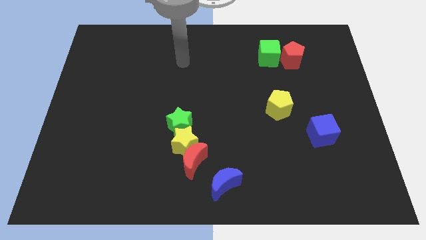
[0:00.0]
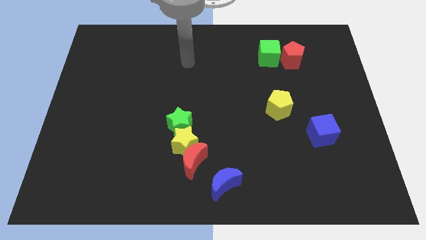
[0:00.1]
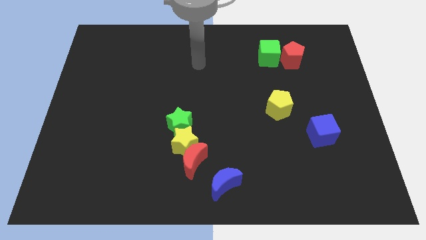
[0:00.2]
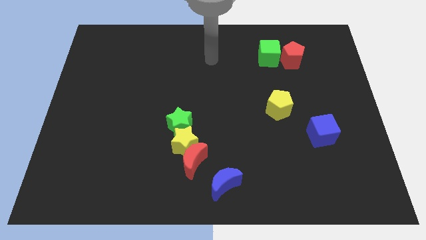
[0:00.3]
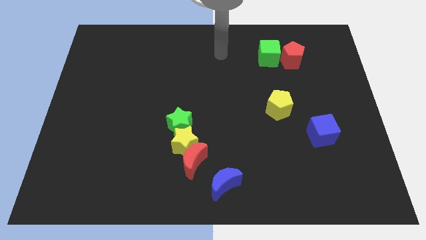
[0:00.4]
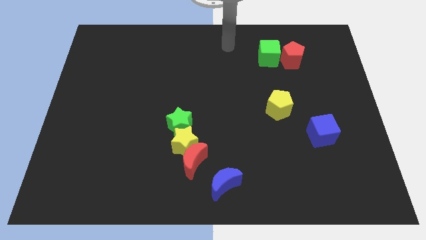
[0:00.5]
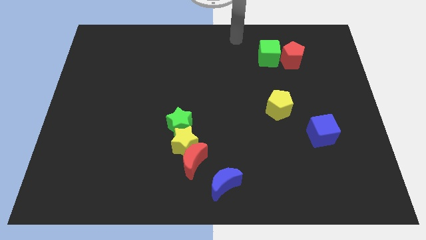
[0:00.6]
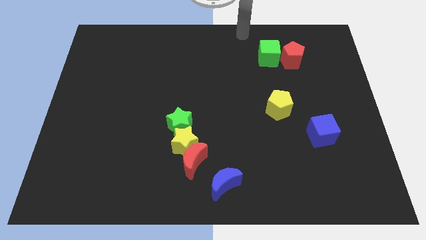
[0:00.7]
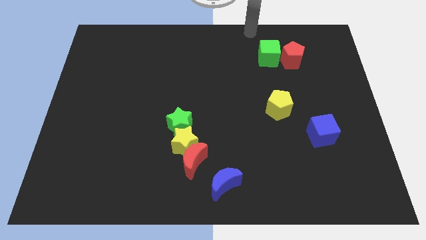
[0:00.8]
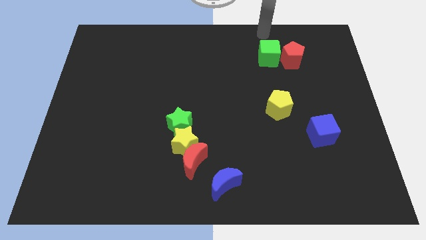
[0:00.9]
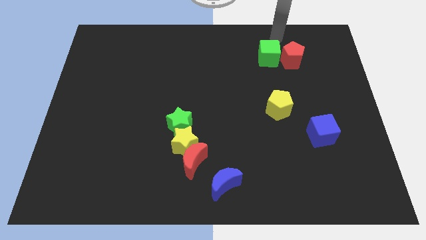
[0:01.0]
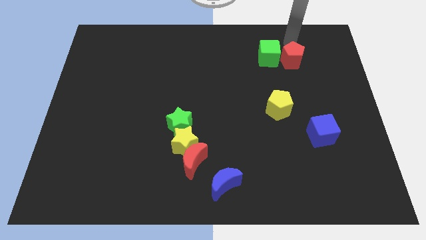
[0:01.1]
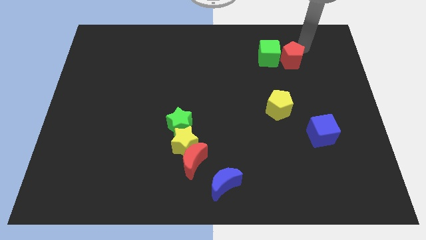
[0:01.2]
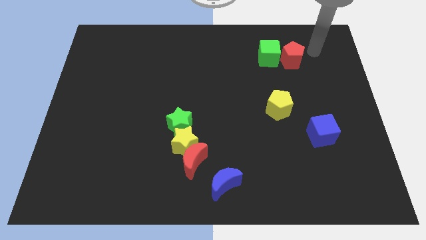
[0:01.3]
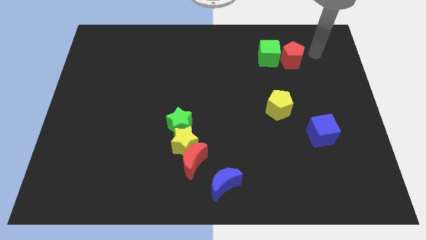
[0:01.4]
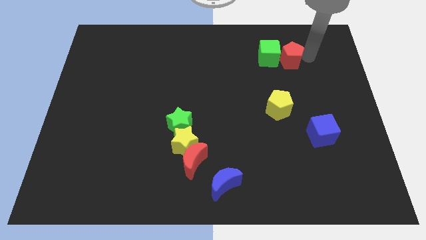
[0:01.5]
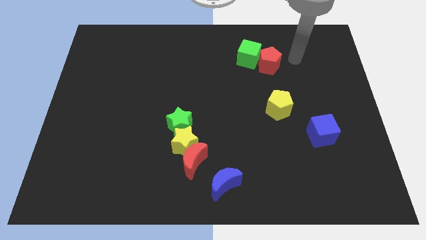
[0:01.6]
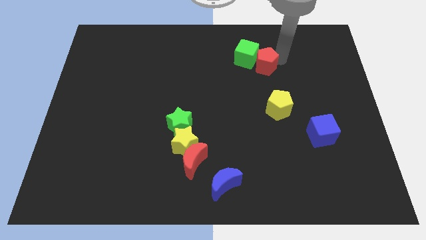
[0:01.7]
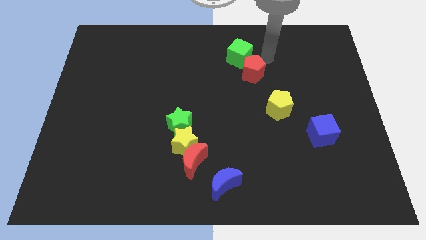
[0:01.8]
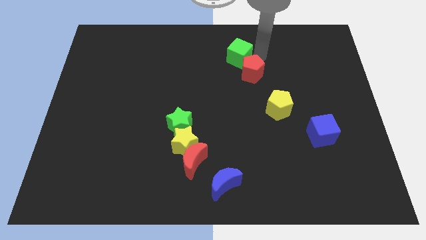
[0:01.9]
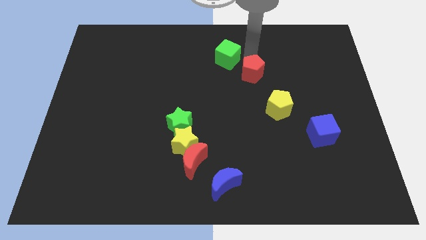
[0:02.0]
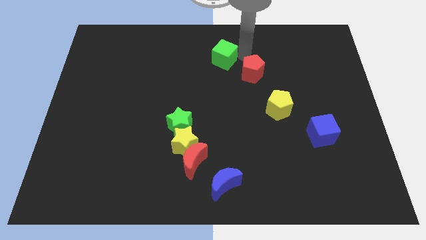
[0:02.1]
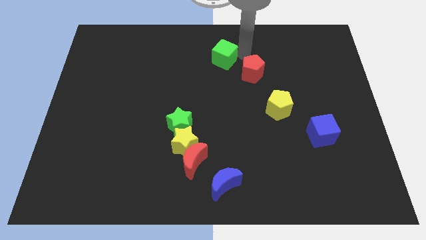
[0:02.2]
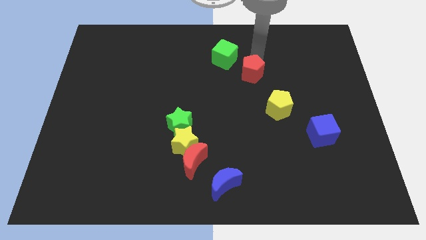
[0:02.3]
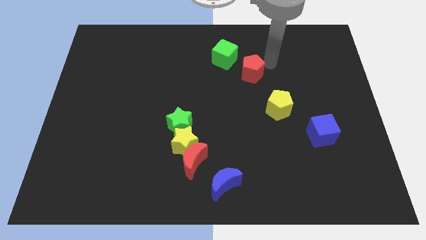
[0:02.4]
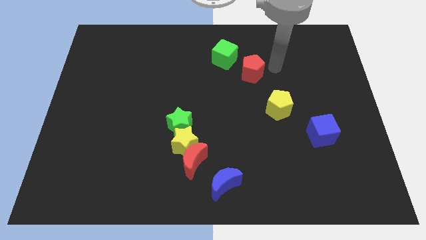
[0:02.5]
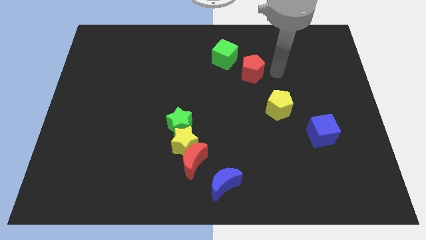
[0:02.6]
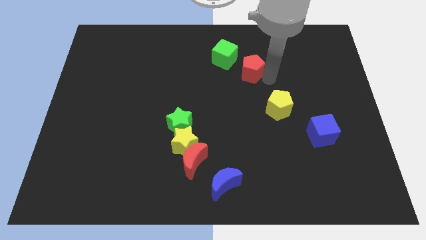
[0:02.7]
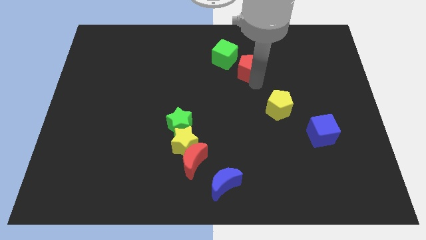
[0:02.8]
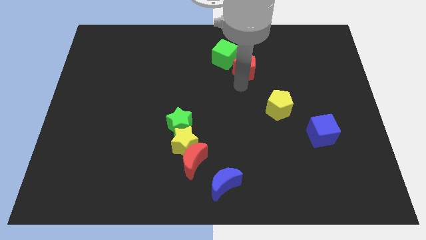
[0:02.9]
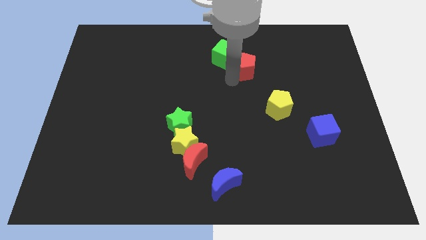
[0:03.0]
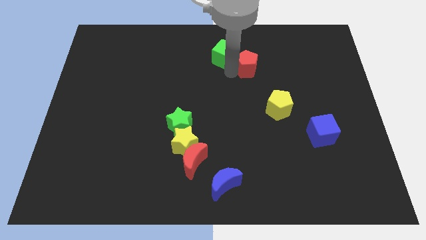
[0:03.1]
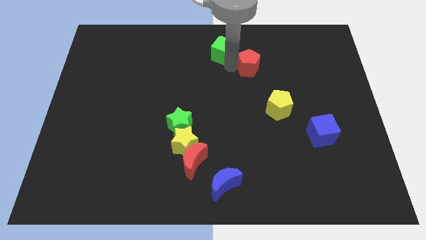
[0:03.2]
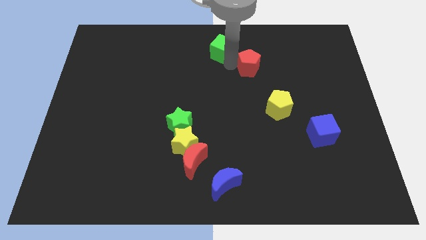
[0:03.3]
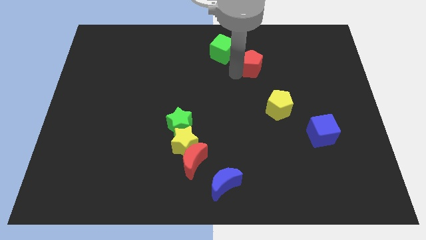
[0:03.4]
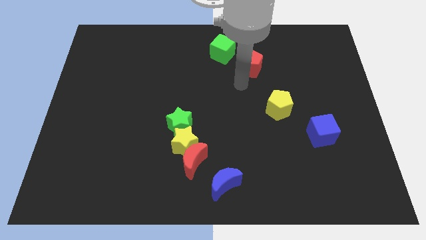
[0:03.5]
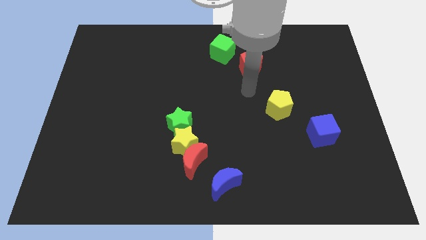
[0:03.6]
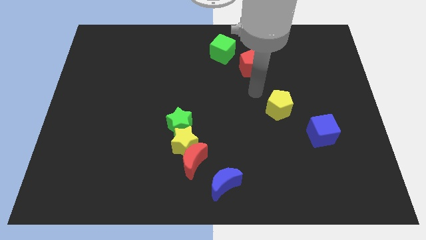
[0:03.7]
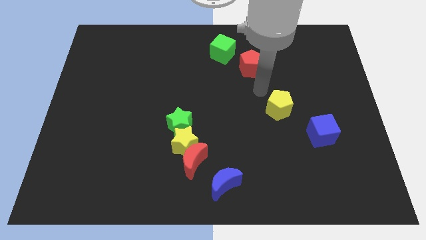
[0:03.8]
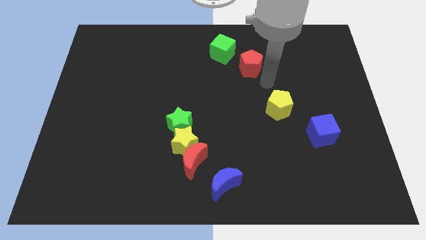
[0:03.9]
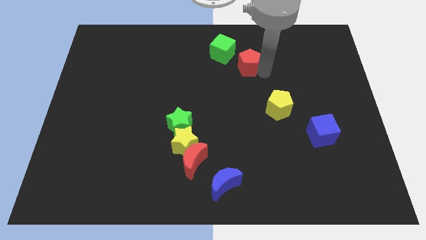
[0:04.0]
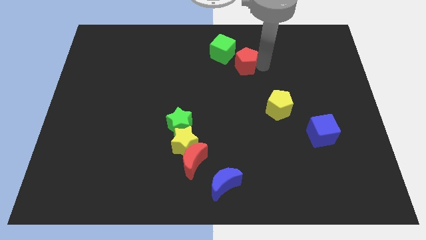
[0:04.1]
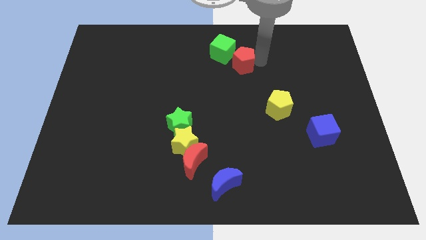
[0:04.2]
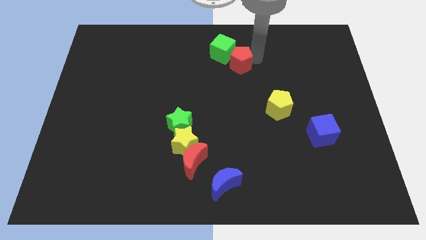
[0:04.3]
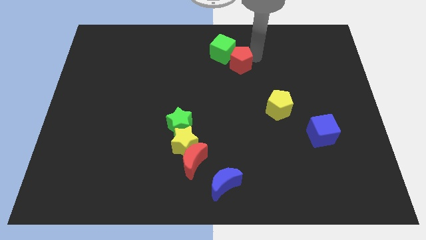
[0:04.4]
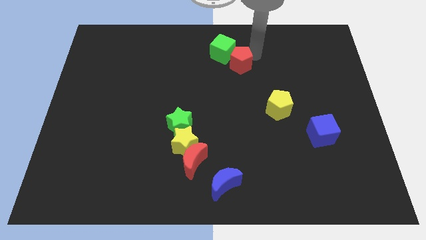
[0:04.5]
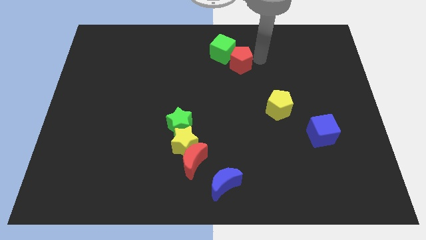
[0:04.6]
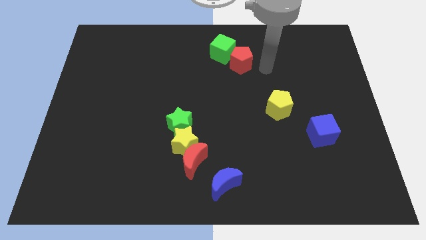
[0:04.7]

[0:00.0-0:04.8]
drag the green cube using the red pentagon to the top center of the board

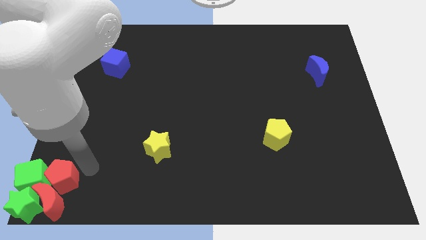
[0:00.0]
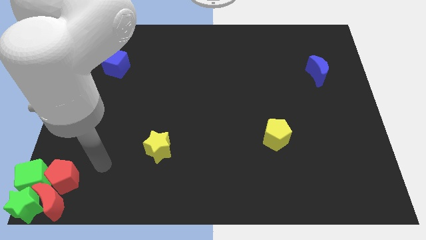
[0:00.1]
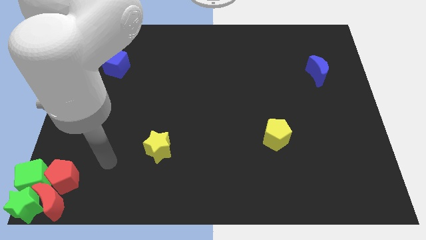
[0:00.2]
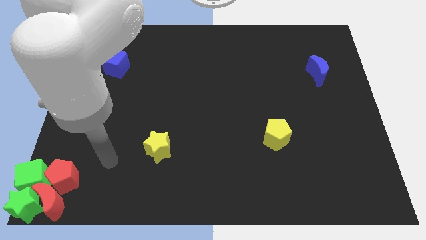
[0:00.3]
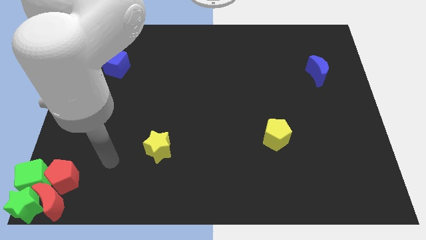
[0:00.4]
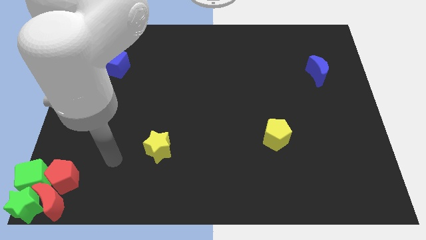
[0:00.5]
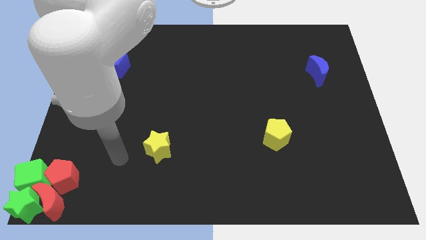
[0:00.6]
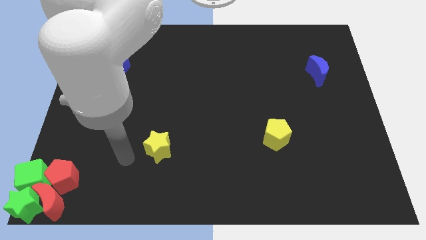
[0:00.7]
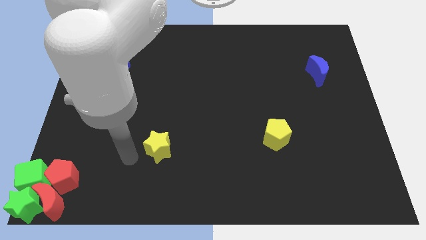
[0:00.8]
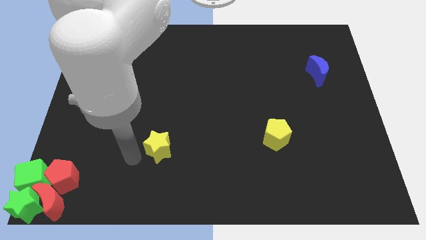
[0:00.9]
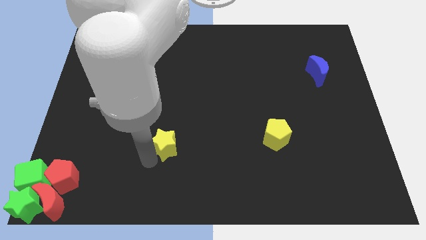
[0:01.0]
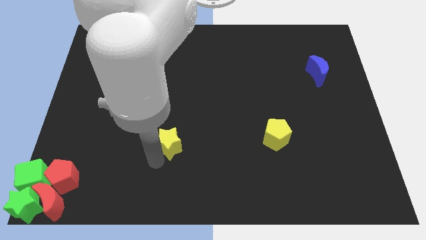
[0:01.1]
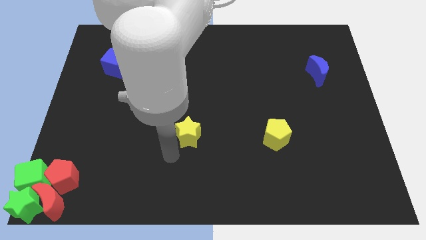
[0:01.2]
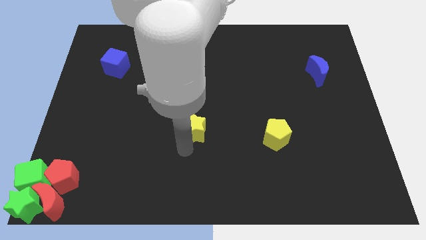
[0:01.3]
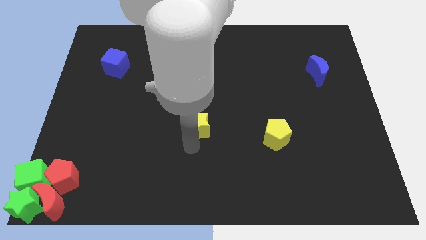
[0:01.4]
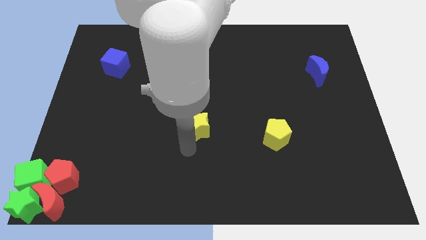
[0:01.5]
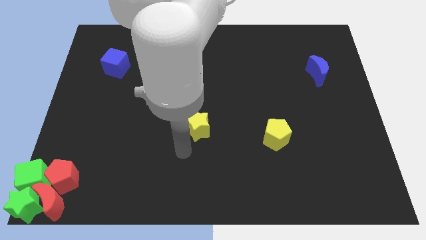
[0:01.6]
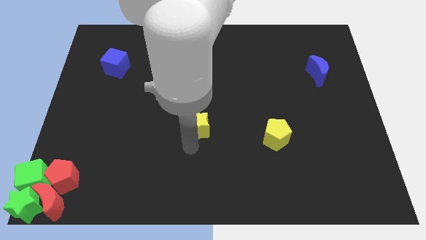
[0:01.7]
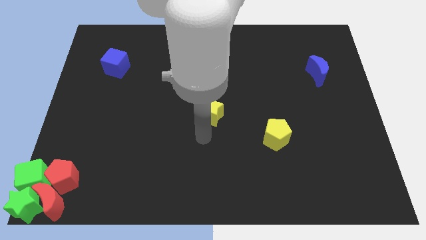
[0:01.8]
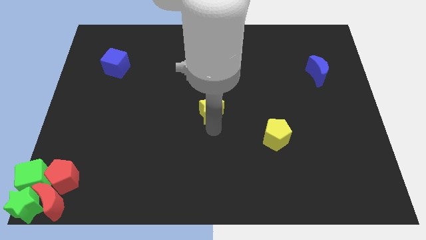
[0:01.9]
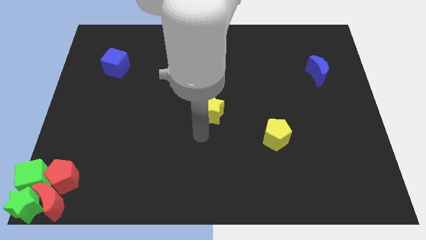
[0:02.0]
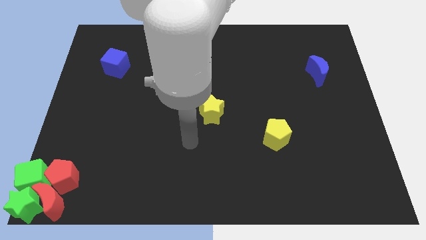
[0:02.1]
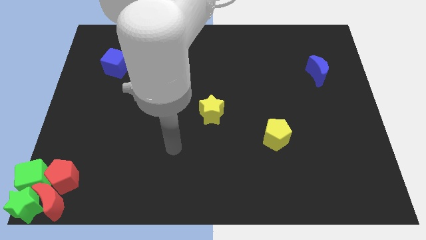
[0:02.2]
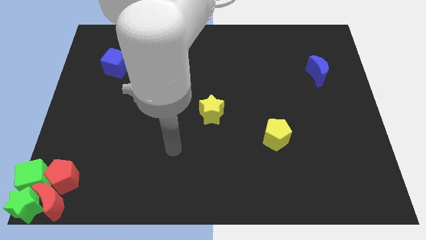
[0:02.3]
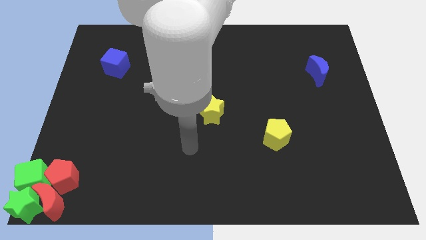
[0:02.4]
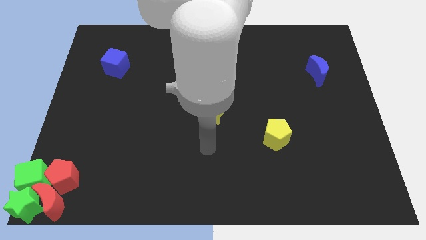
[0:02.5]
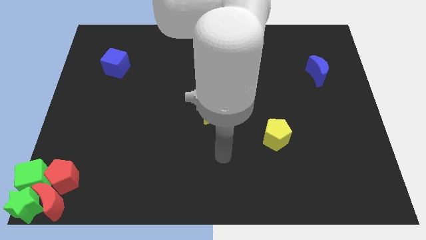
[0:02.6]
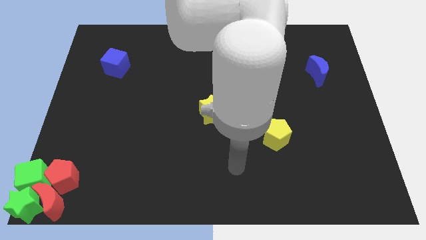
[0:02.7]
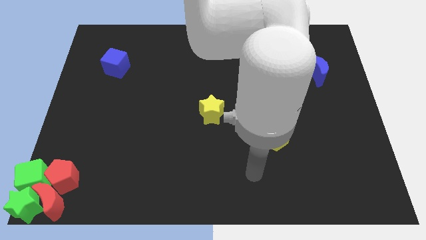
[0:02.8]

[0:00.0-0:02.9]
place the yellow star at the center of the board

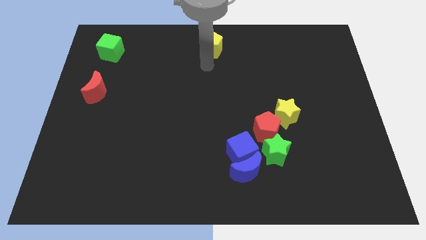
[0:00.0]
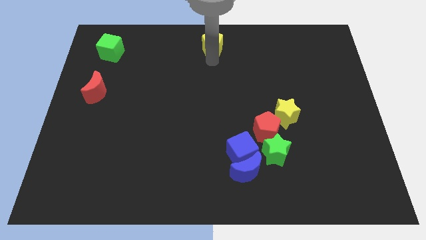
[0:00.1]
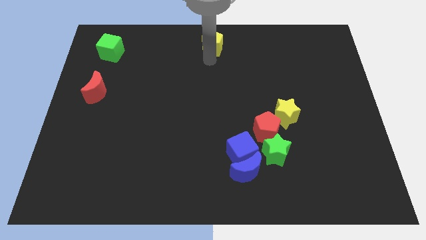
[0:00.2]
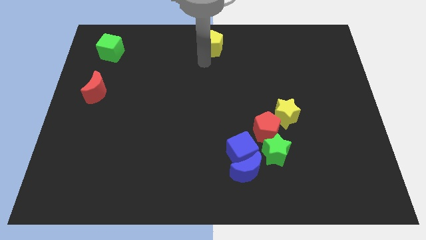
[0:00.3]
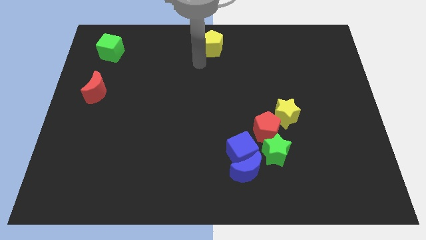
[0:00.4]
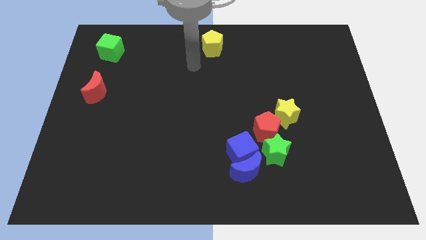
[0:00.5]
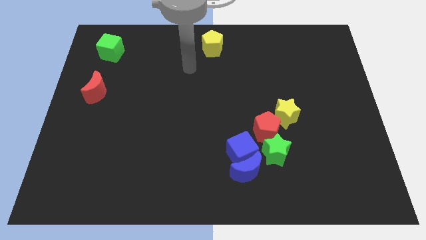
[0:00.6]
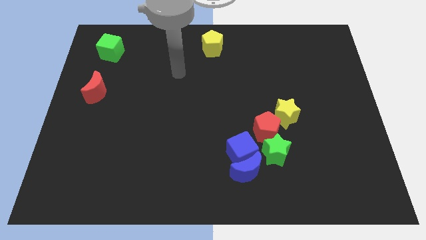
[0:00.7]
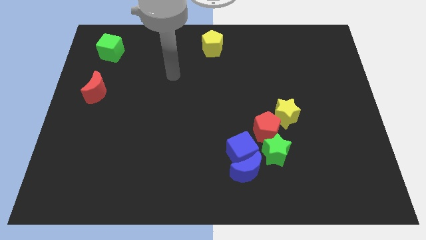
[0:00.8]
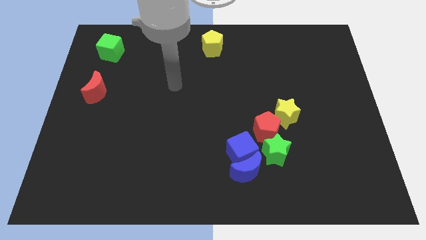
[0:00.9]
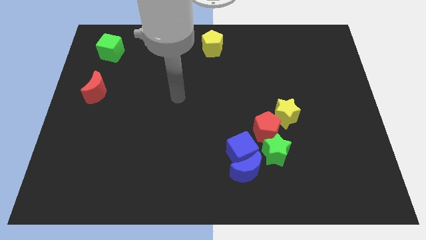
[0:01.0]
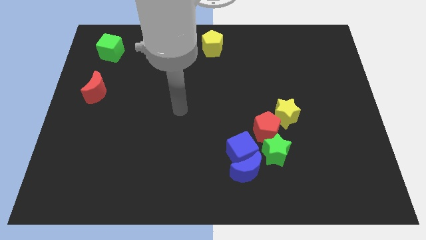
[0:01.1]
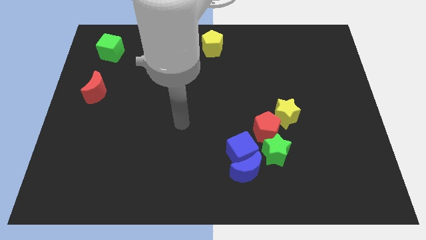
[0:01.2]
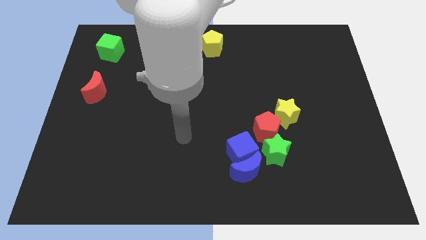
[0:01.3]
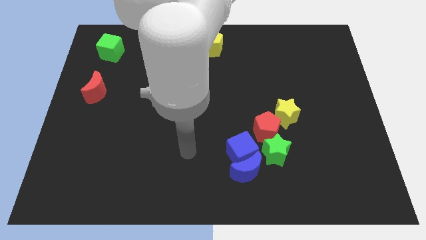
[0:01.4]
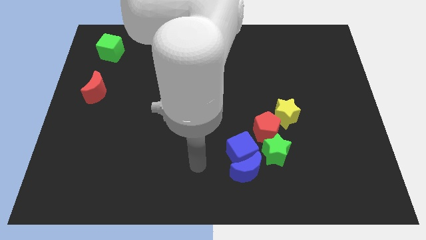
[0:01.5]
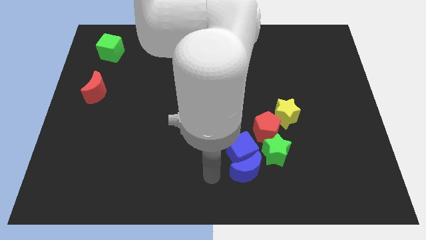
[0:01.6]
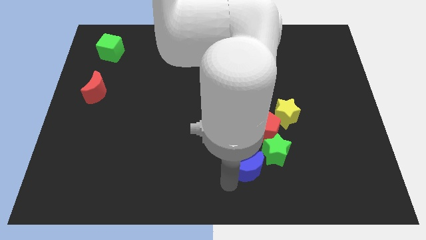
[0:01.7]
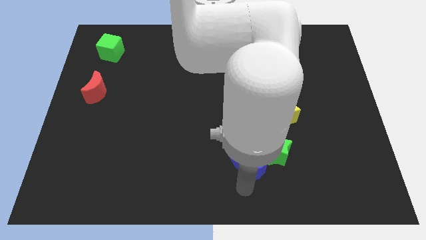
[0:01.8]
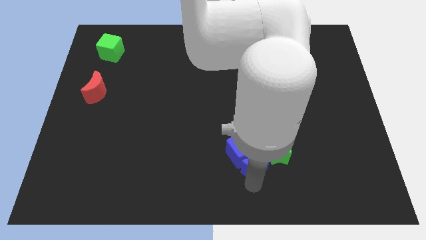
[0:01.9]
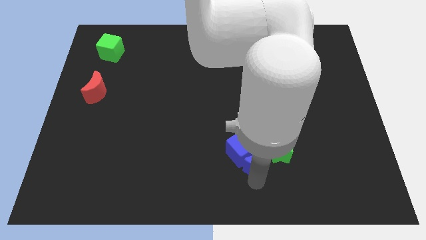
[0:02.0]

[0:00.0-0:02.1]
place your arm below blue moon
